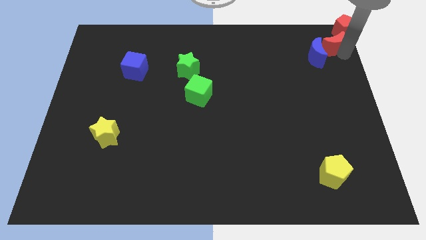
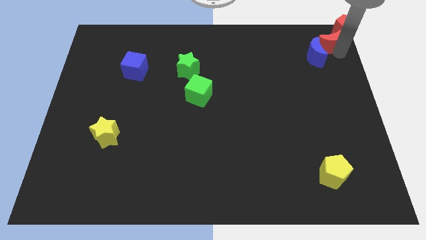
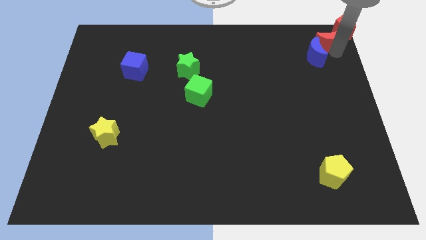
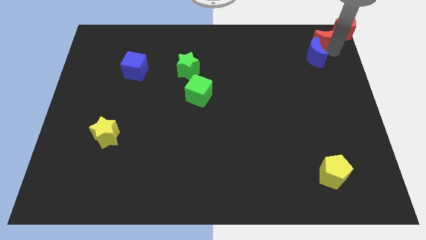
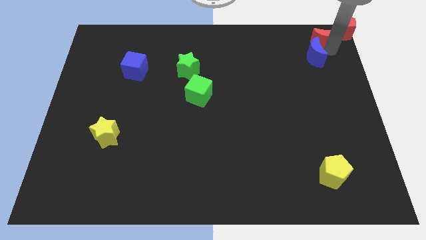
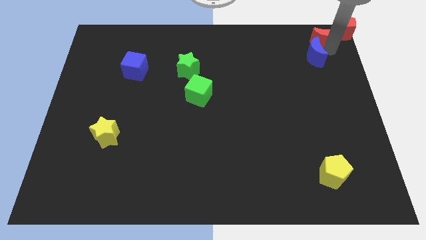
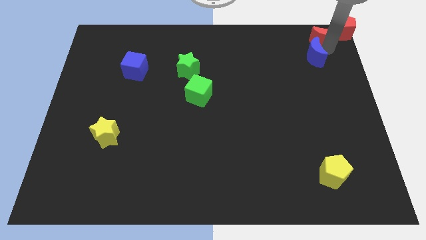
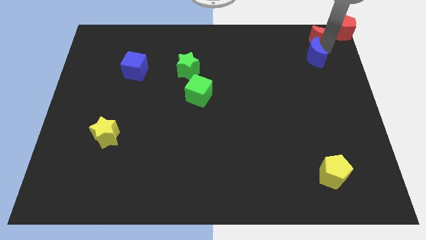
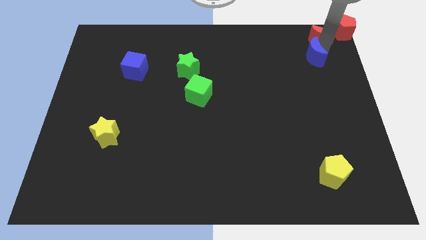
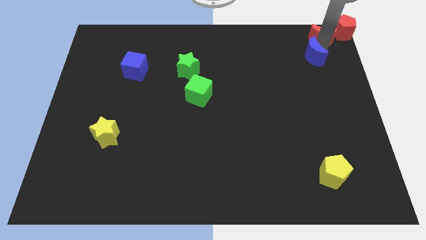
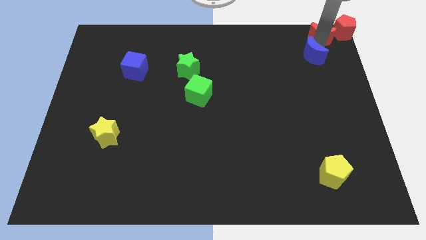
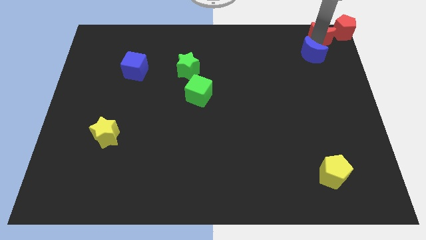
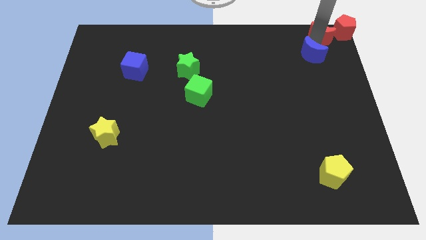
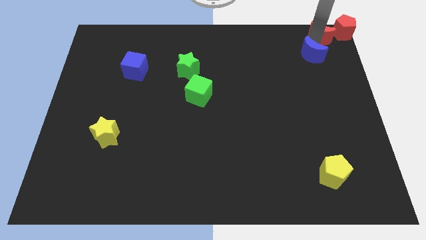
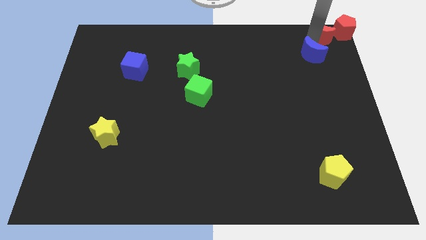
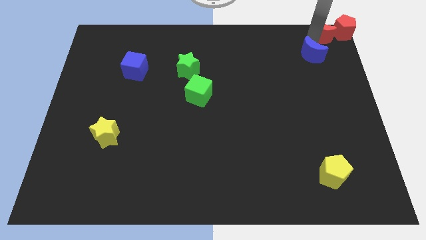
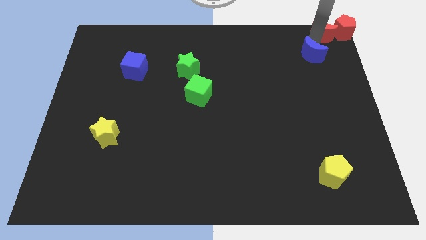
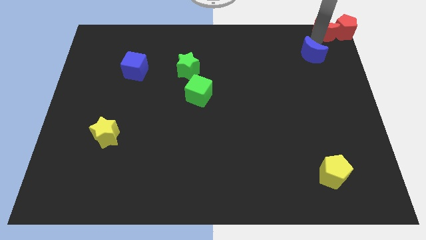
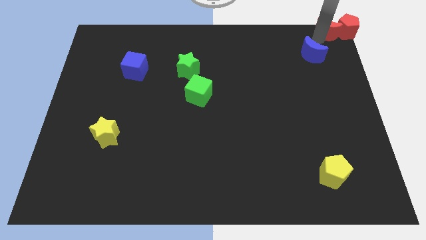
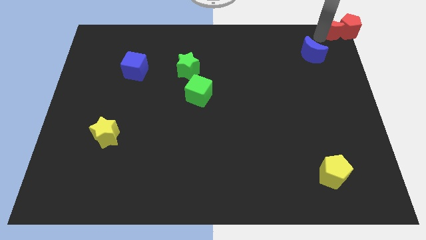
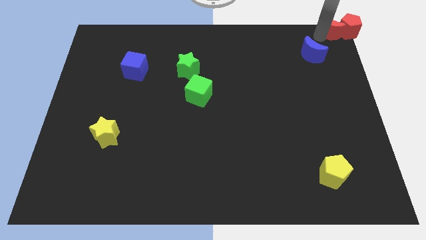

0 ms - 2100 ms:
put the red crescent on the left side of the red pentagon

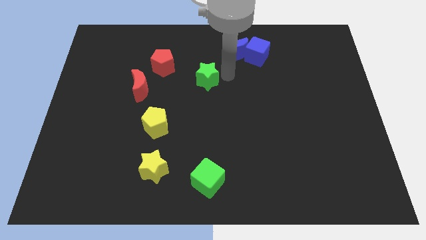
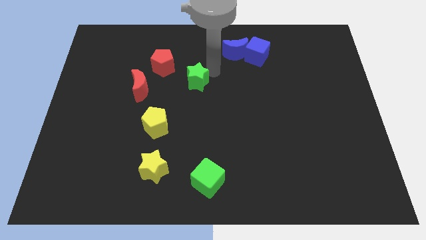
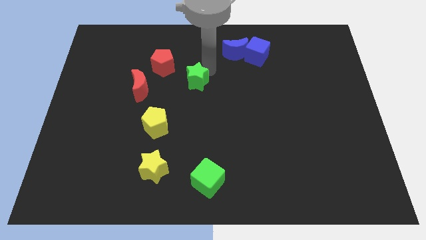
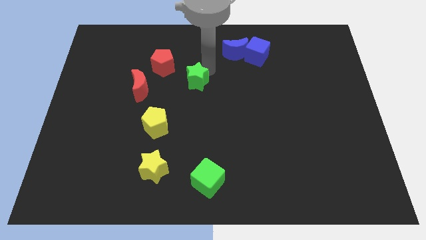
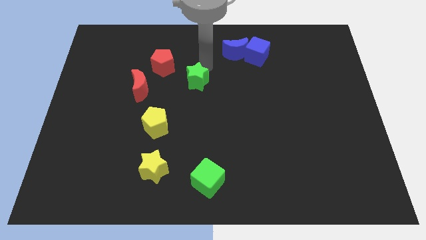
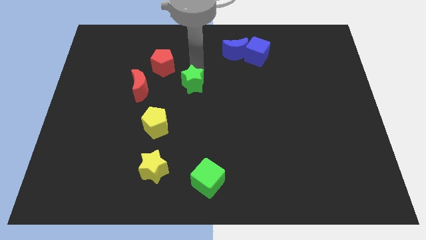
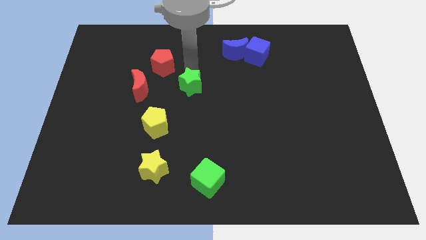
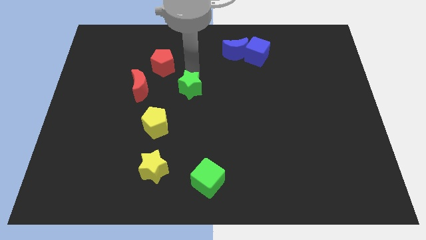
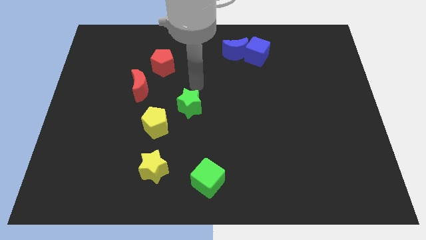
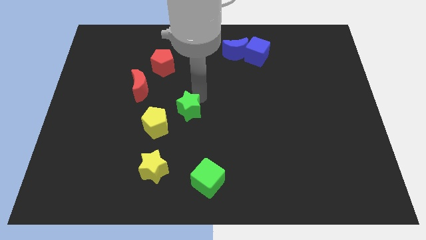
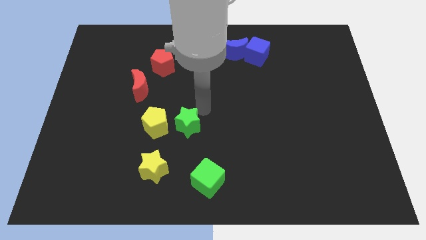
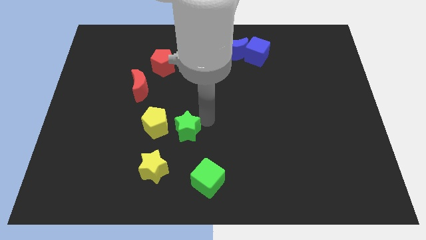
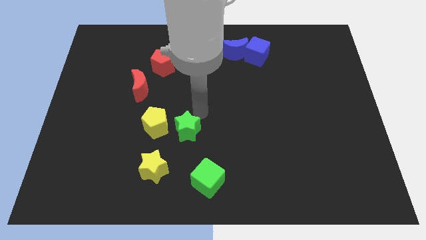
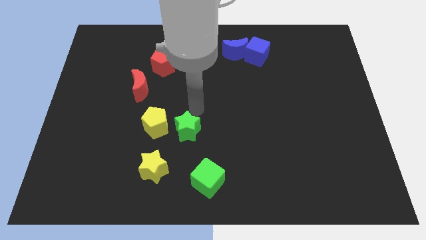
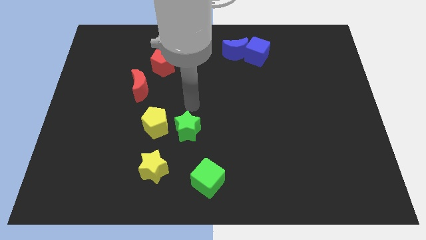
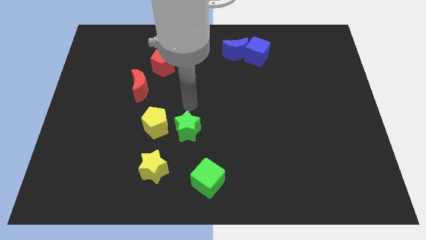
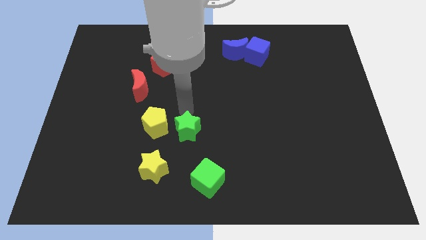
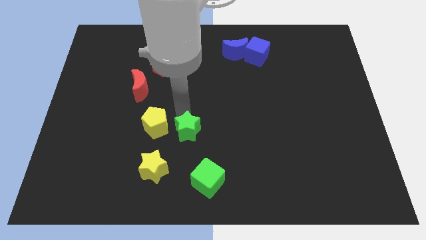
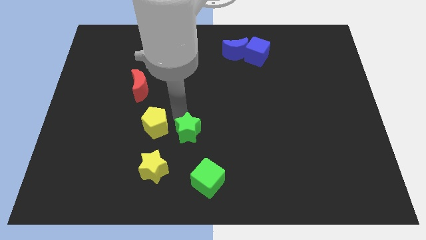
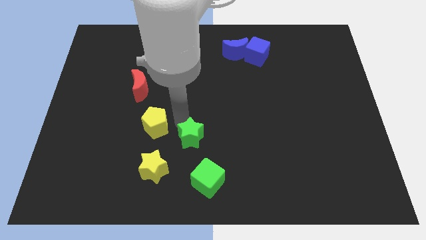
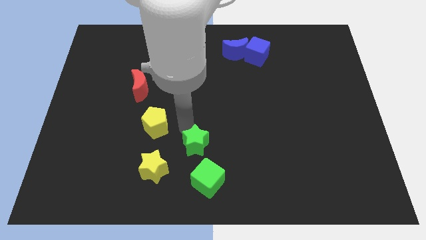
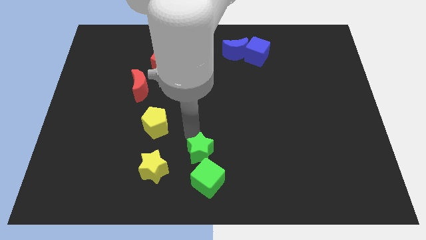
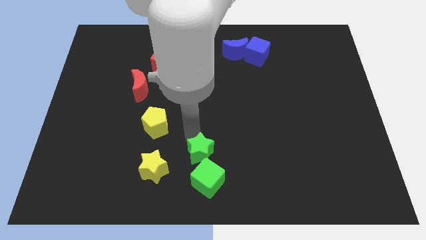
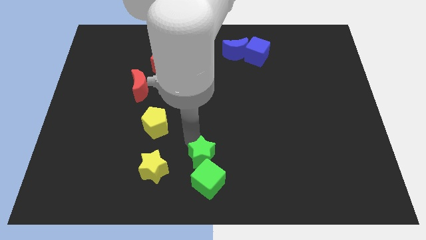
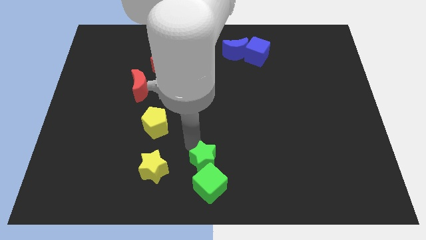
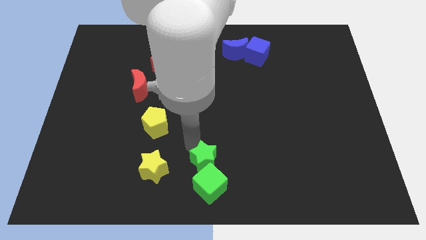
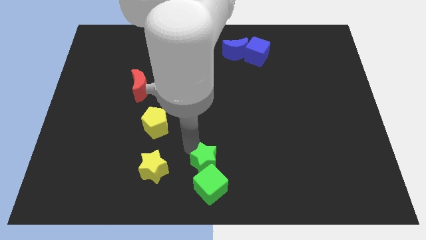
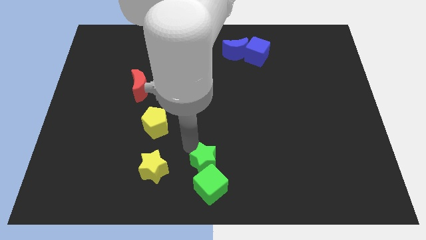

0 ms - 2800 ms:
push green cube with green star to the bottom center of the board

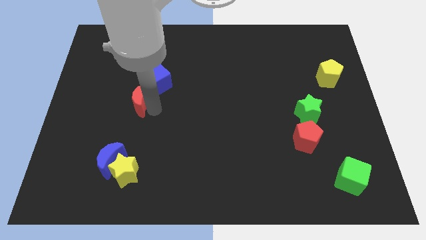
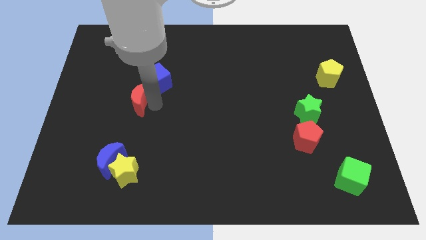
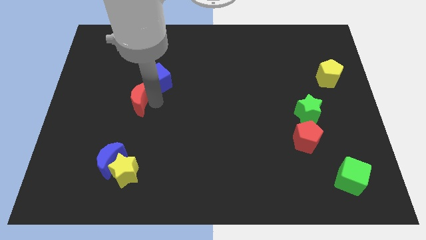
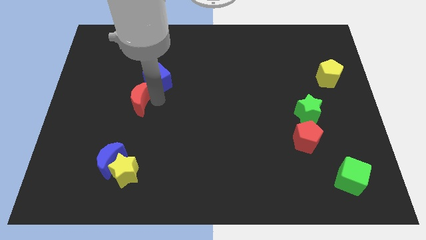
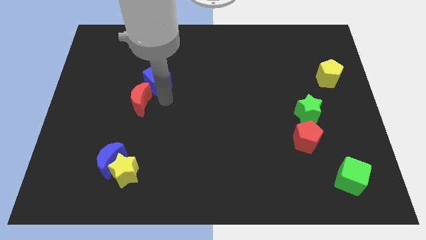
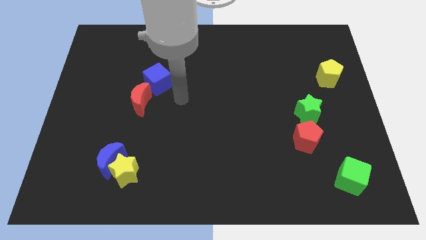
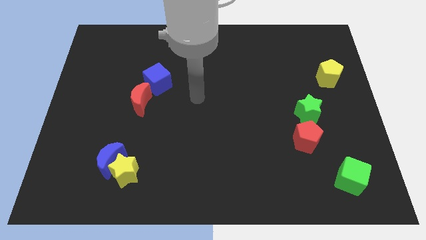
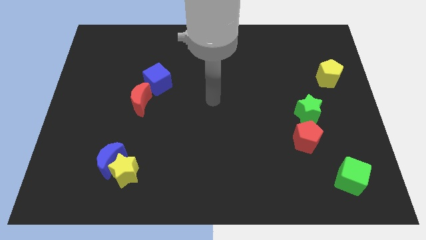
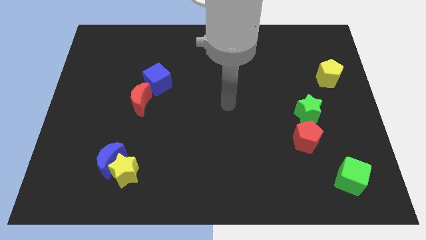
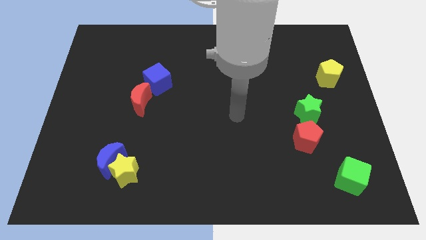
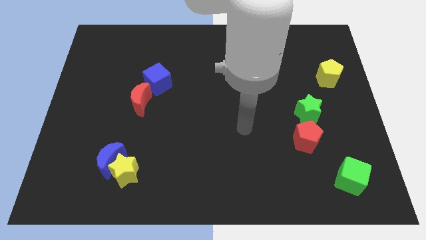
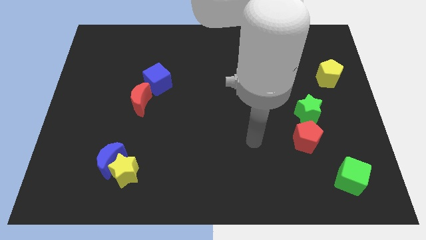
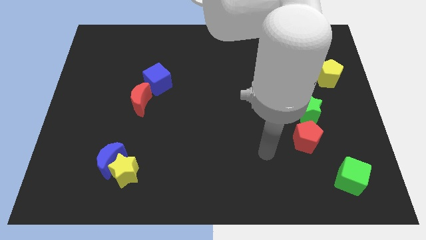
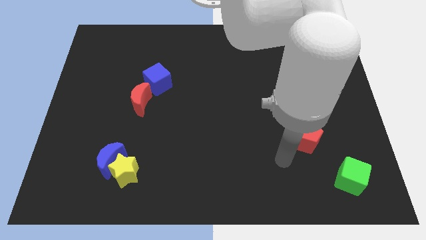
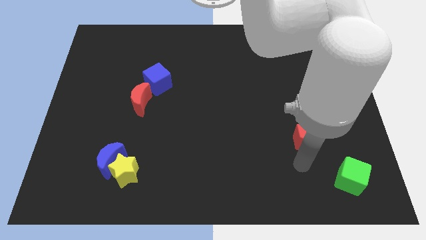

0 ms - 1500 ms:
move the arm away from the red moon

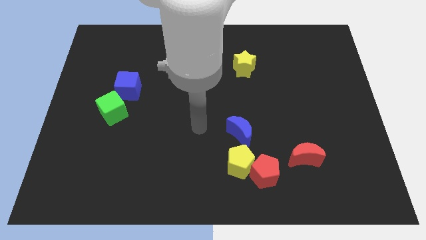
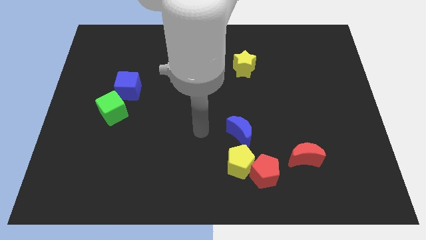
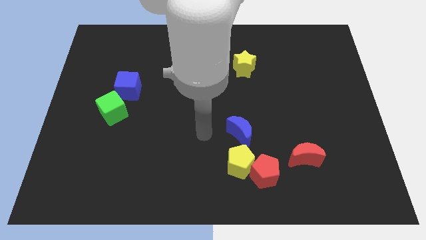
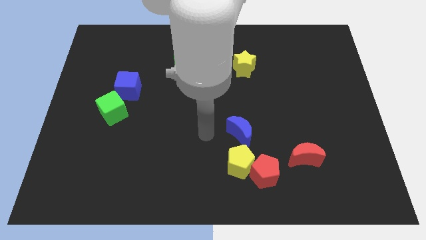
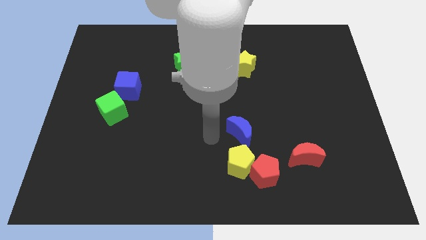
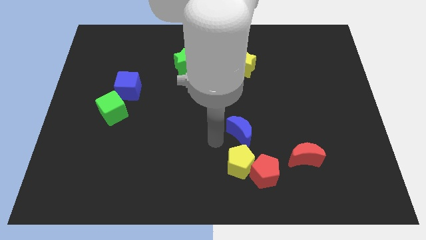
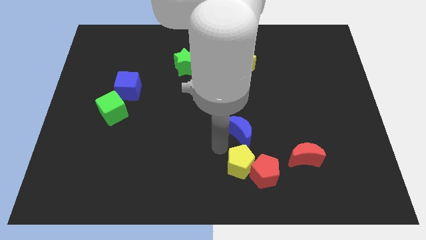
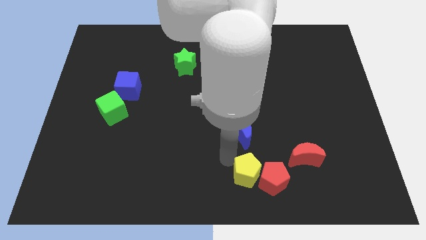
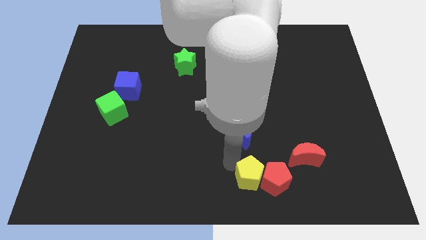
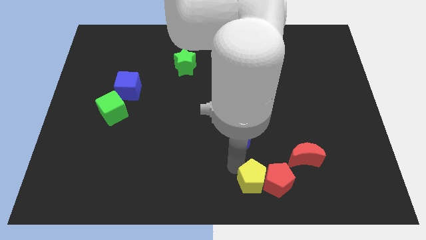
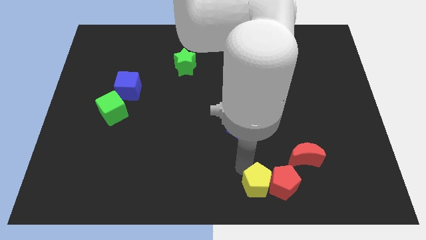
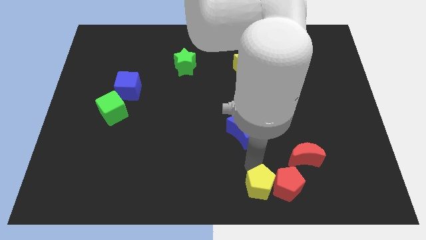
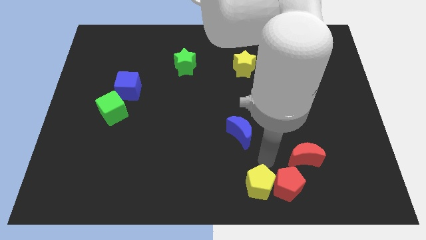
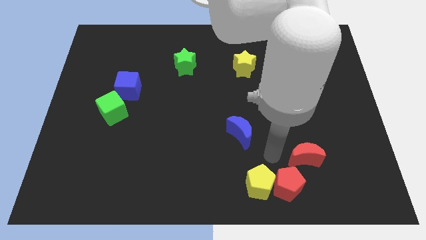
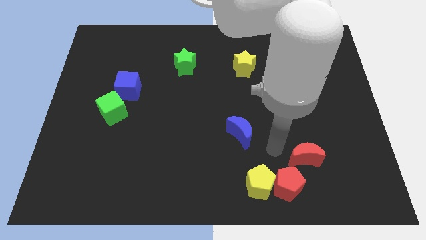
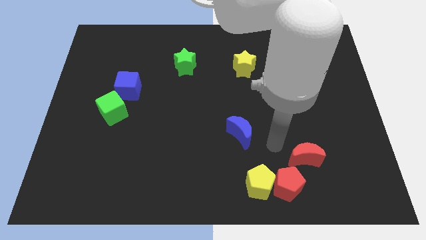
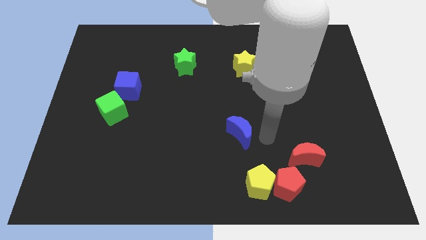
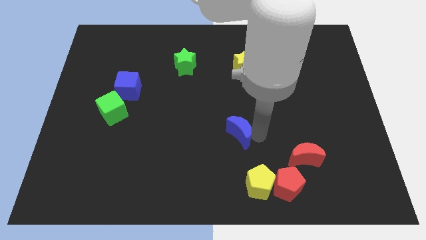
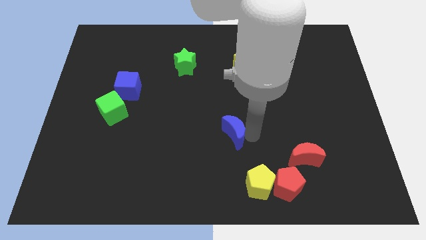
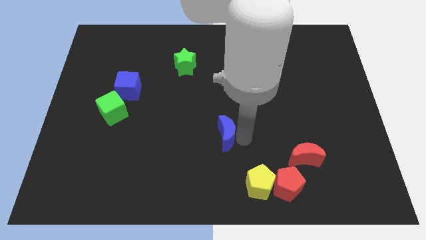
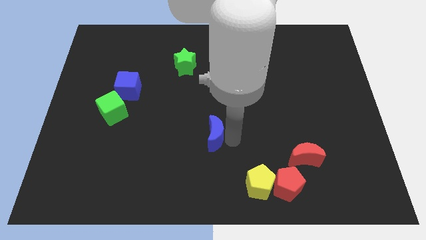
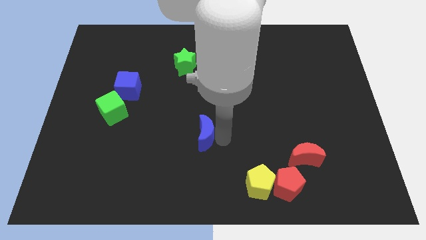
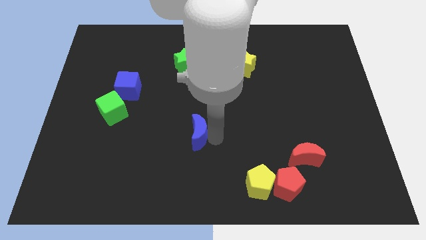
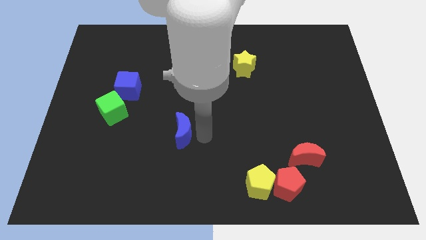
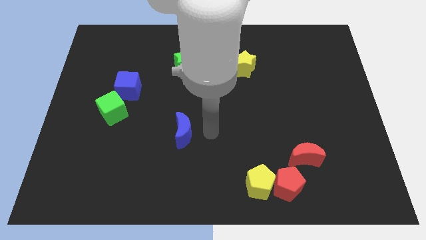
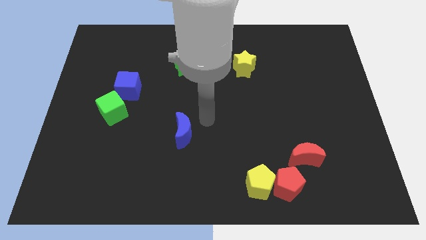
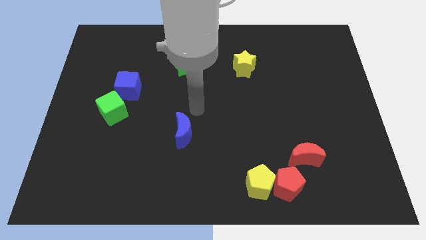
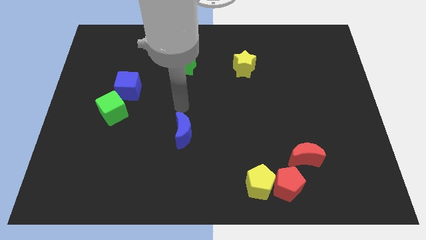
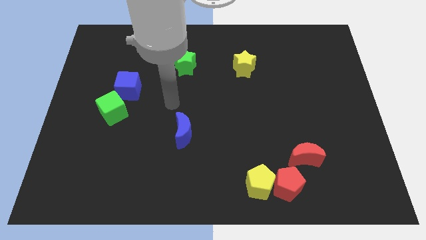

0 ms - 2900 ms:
place the blue crescent vertically below the green star
